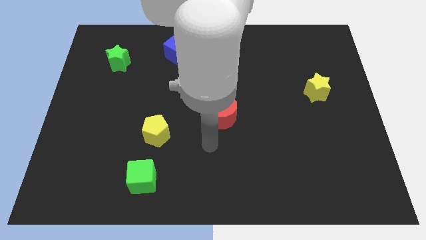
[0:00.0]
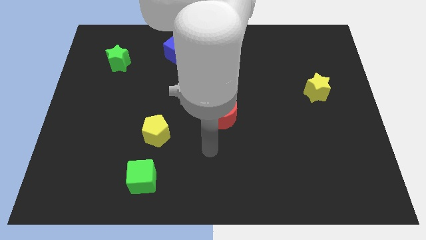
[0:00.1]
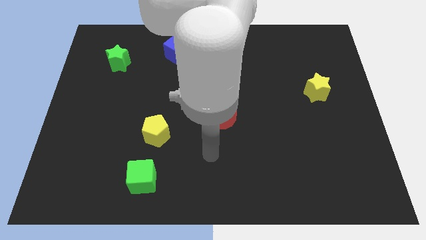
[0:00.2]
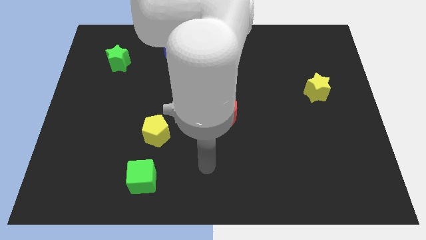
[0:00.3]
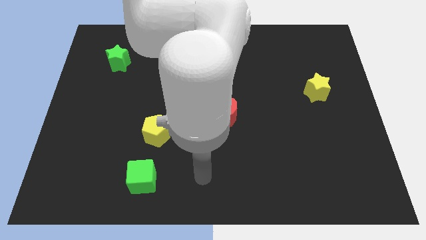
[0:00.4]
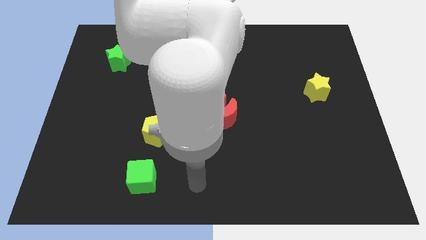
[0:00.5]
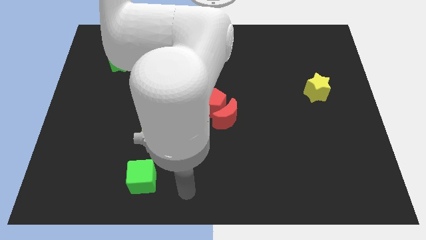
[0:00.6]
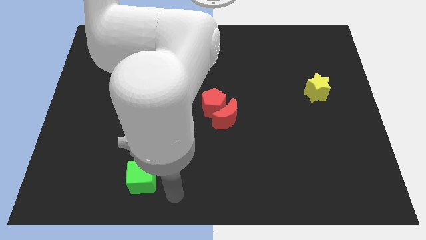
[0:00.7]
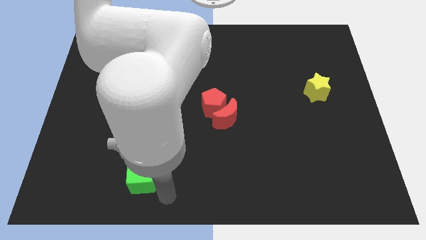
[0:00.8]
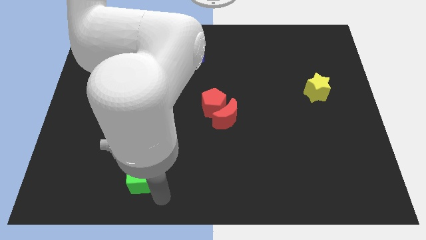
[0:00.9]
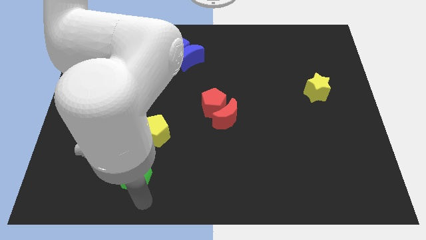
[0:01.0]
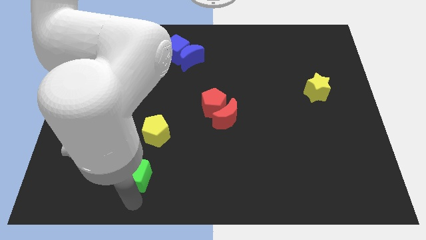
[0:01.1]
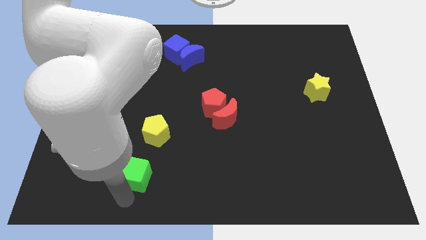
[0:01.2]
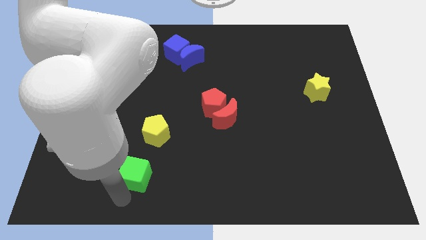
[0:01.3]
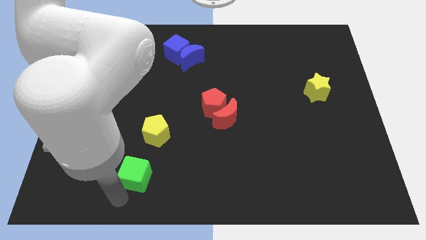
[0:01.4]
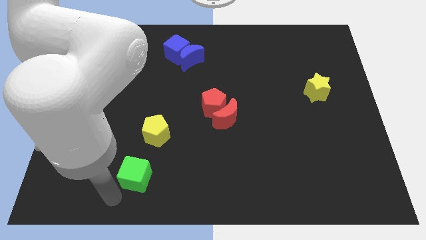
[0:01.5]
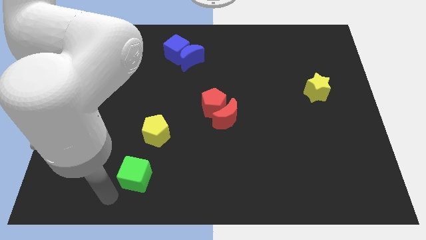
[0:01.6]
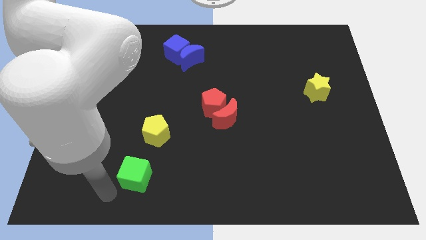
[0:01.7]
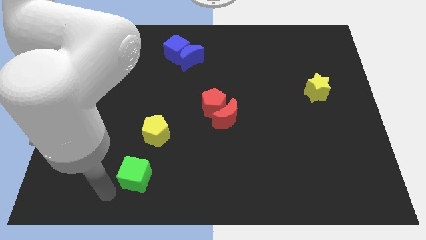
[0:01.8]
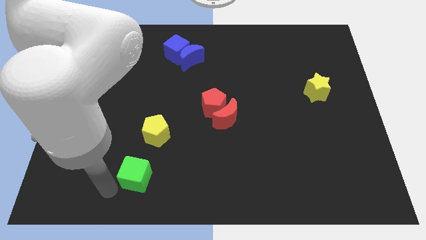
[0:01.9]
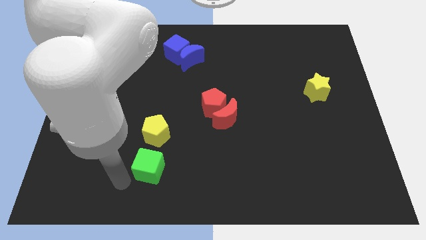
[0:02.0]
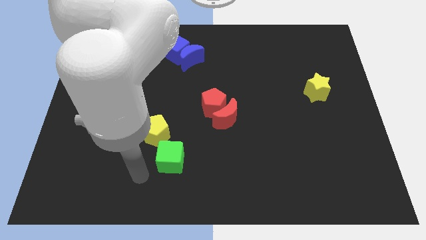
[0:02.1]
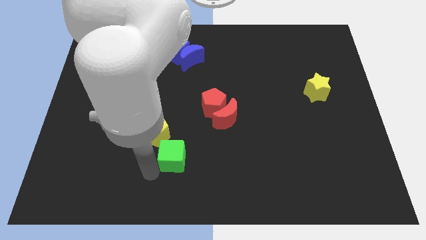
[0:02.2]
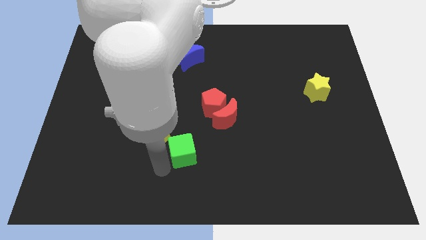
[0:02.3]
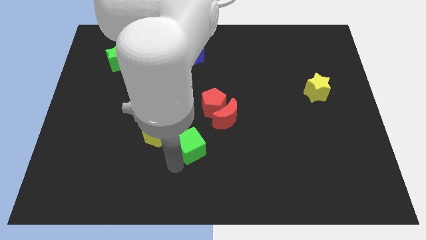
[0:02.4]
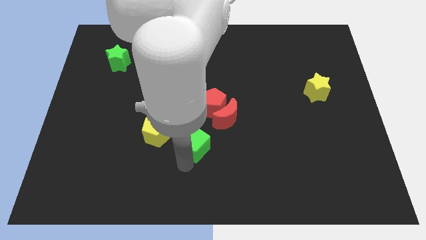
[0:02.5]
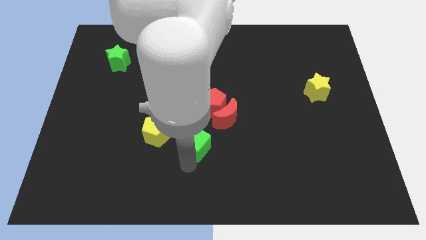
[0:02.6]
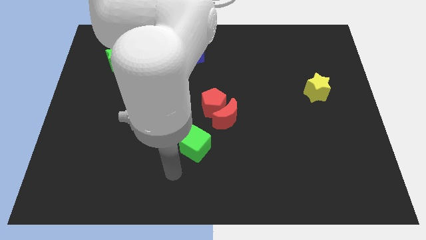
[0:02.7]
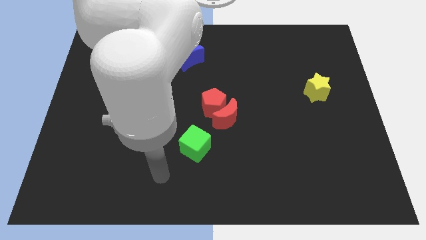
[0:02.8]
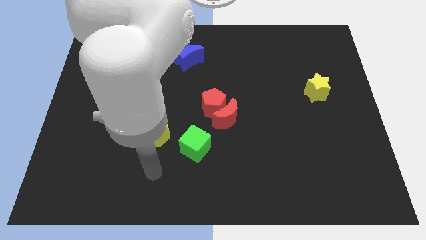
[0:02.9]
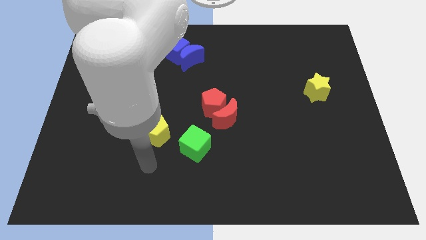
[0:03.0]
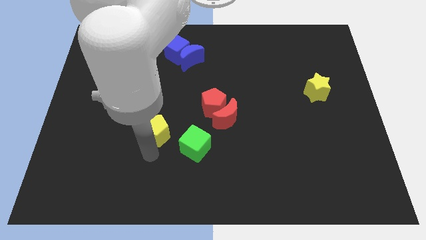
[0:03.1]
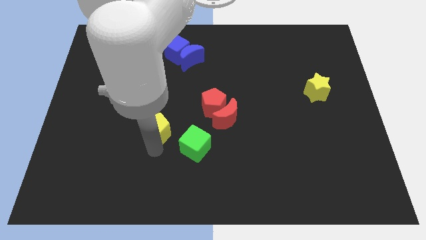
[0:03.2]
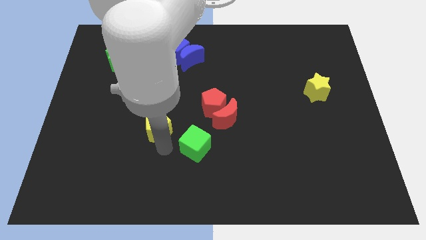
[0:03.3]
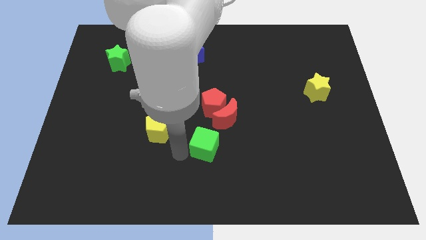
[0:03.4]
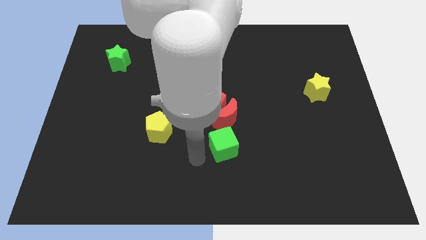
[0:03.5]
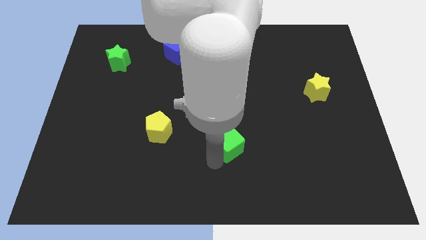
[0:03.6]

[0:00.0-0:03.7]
put the green cube at the bottom side of the red moon

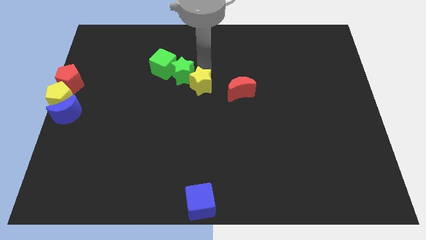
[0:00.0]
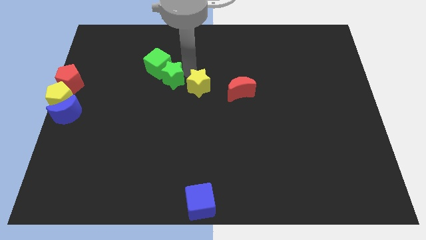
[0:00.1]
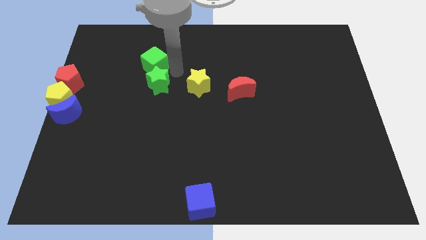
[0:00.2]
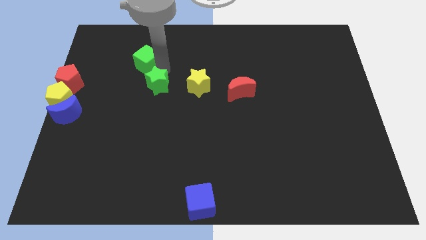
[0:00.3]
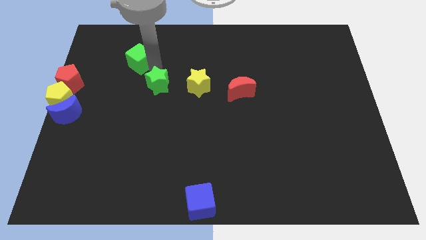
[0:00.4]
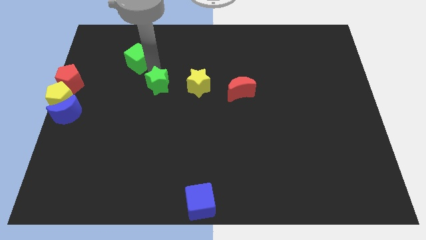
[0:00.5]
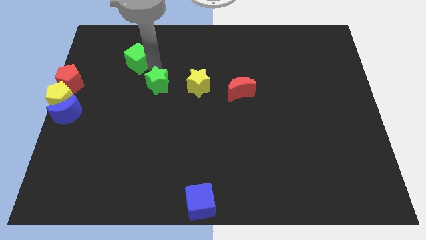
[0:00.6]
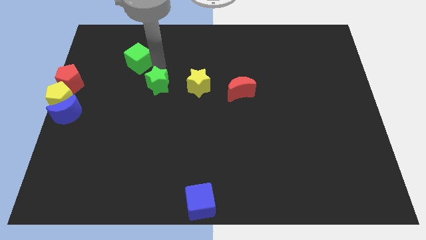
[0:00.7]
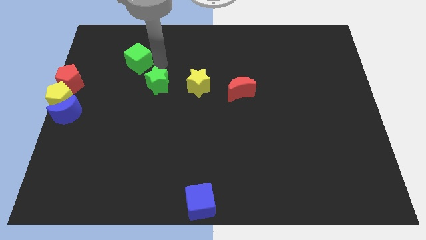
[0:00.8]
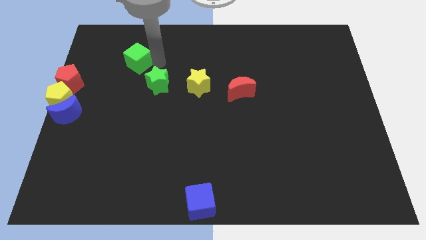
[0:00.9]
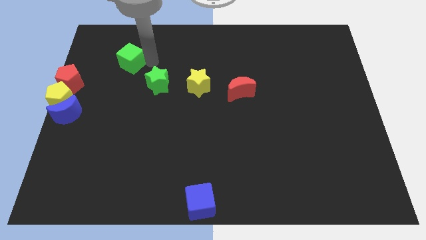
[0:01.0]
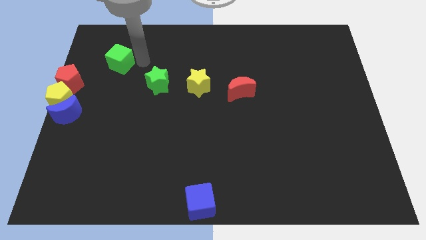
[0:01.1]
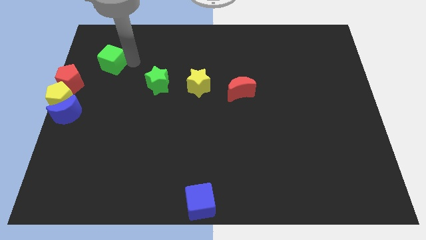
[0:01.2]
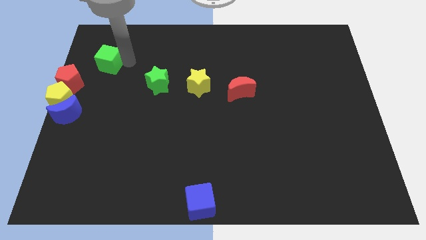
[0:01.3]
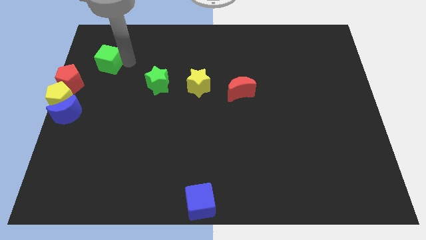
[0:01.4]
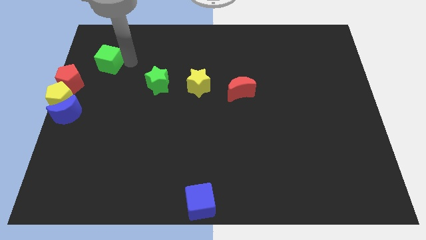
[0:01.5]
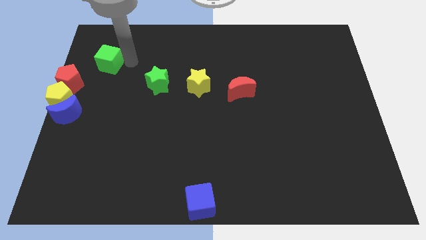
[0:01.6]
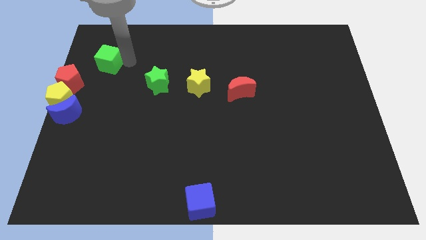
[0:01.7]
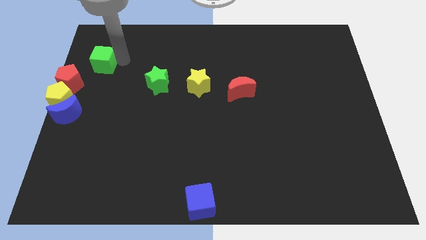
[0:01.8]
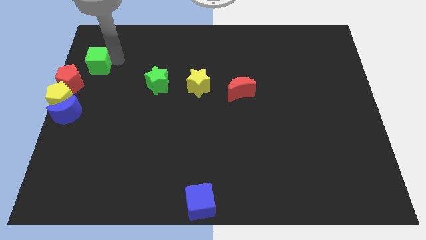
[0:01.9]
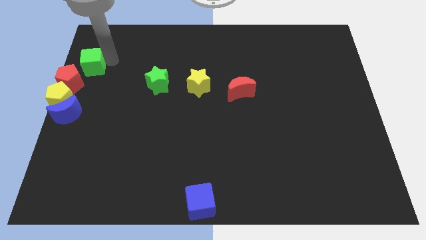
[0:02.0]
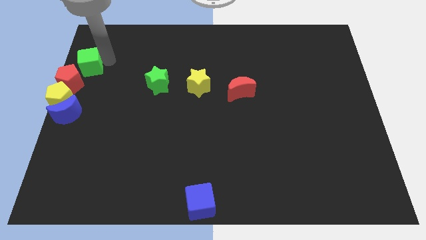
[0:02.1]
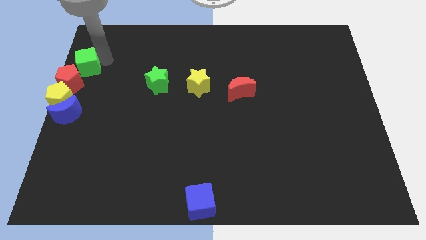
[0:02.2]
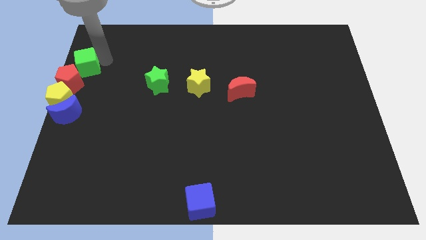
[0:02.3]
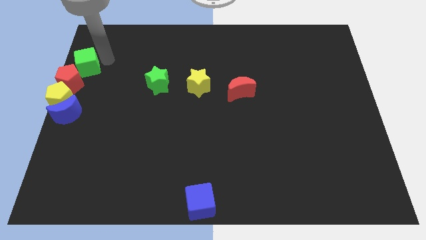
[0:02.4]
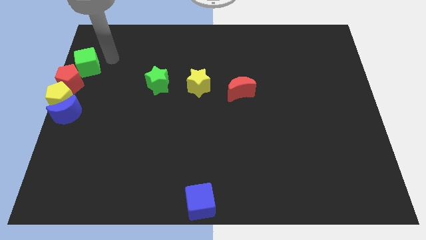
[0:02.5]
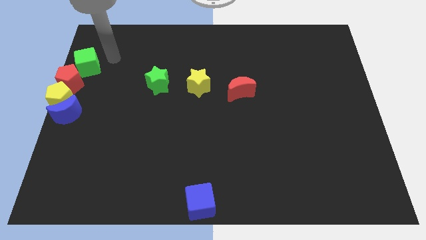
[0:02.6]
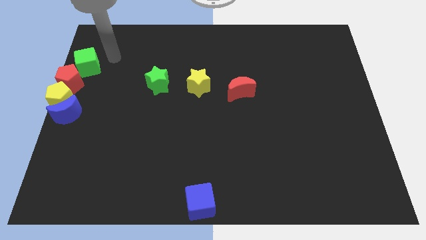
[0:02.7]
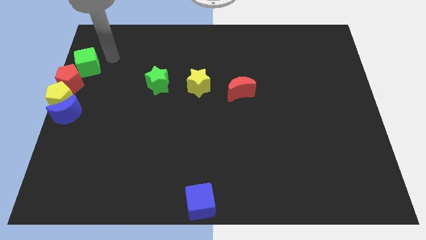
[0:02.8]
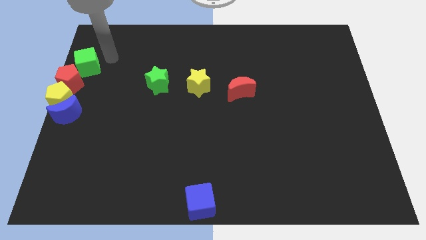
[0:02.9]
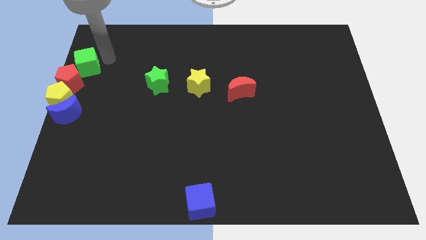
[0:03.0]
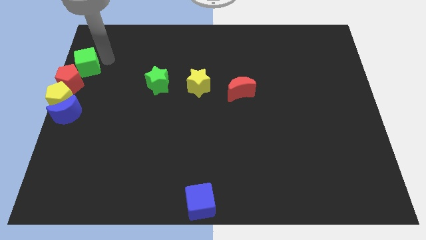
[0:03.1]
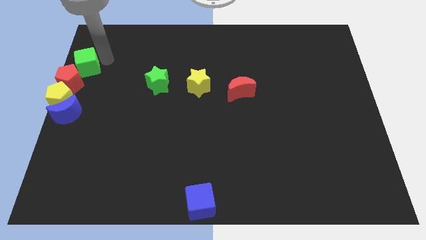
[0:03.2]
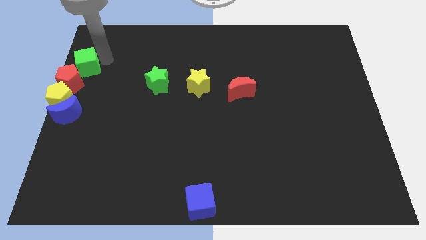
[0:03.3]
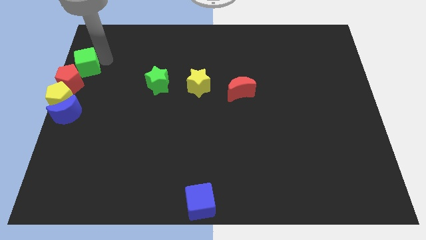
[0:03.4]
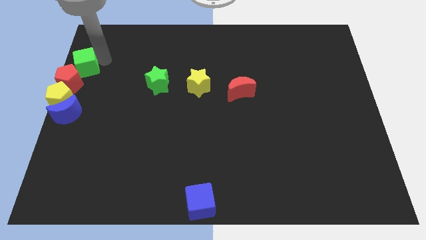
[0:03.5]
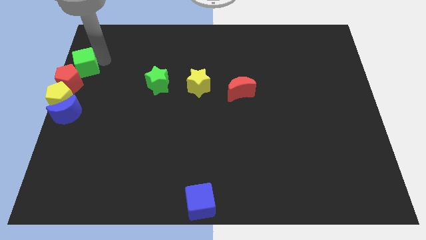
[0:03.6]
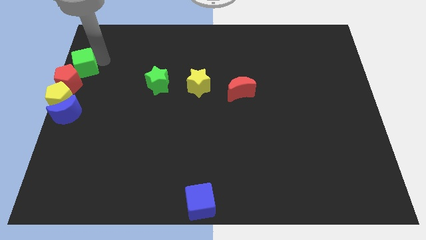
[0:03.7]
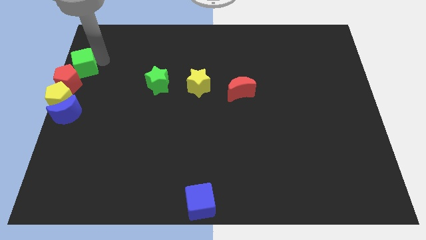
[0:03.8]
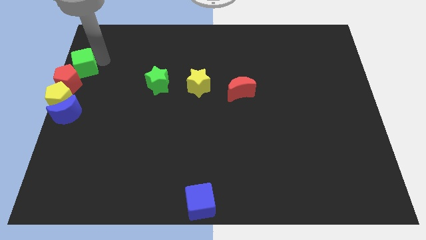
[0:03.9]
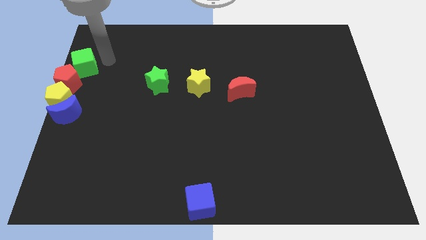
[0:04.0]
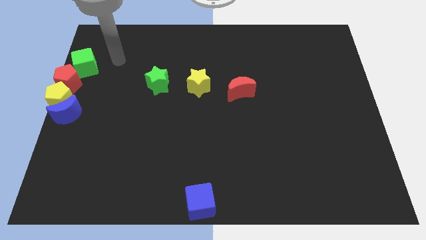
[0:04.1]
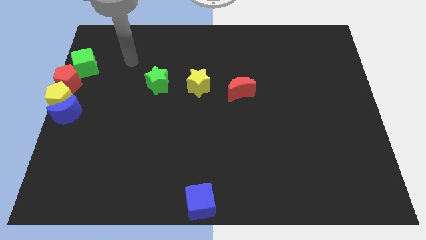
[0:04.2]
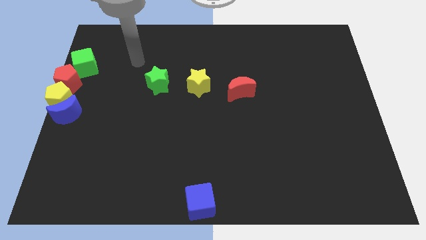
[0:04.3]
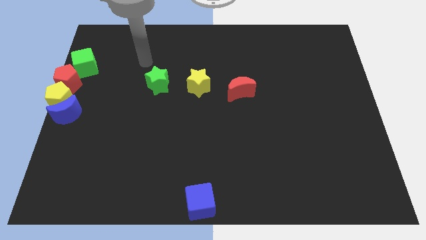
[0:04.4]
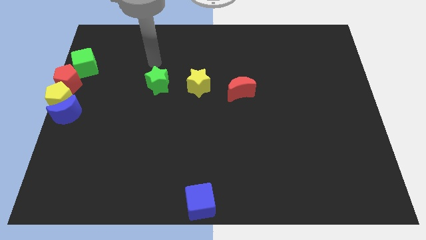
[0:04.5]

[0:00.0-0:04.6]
push the green cube to the top right corner of the red pentagon

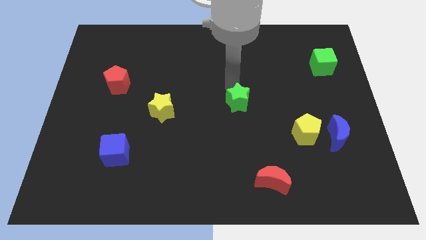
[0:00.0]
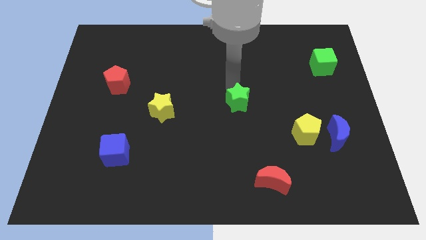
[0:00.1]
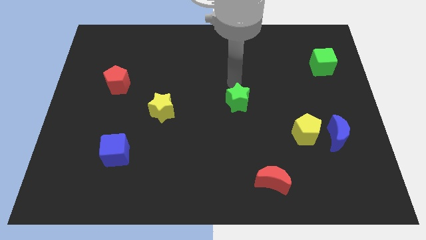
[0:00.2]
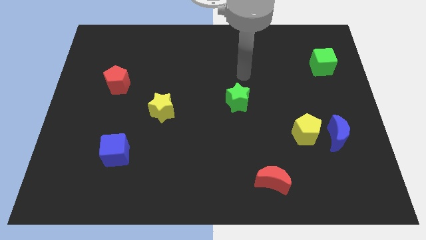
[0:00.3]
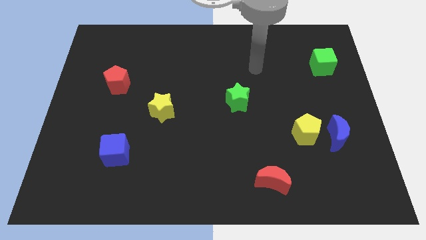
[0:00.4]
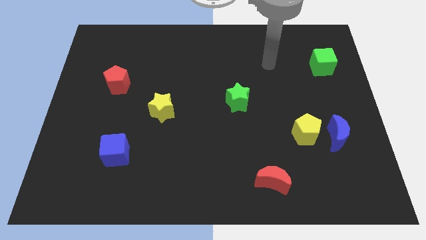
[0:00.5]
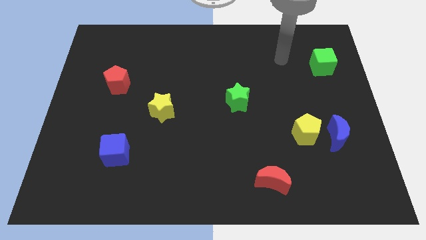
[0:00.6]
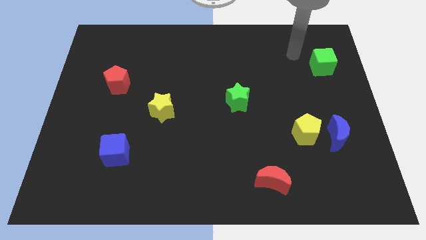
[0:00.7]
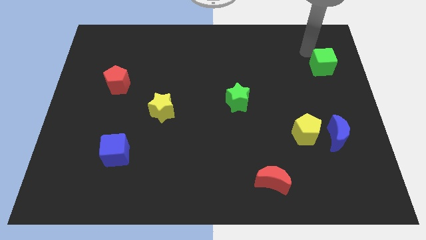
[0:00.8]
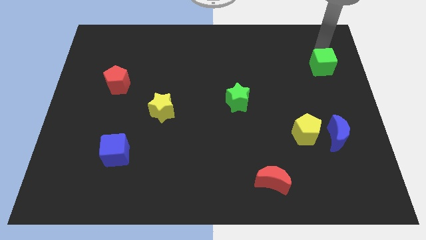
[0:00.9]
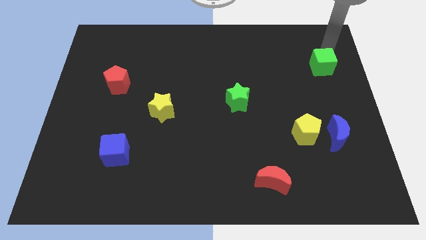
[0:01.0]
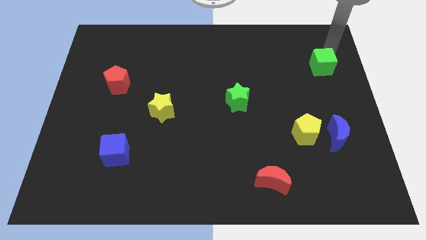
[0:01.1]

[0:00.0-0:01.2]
move the arm to the top of the green cube
